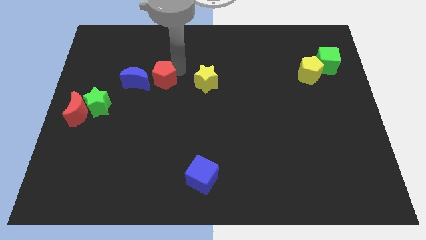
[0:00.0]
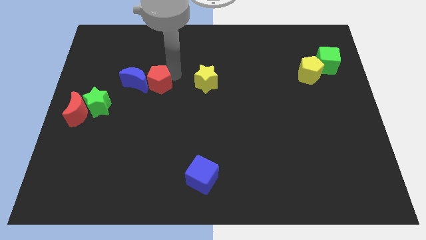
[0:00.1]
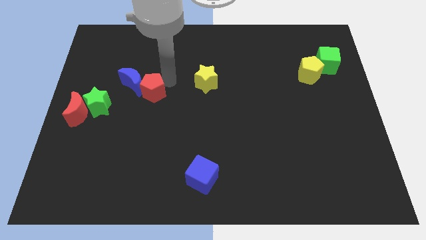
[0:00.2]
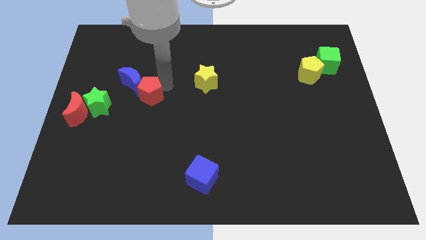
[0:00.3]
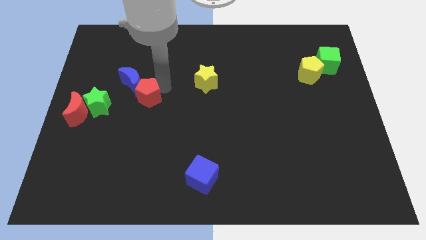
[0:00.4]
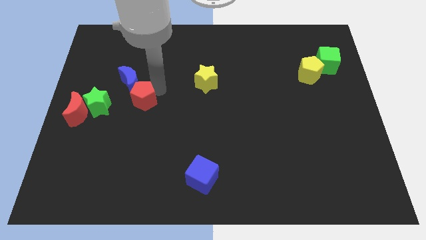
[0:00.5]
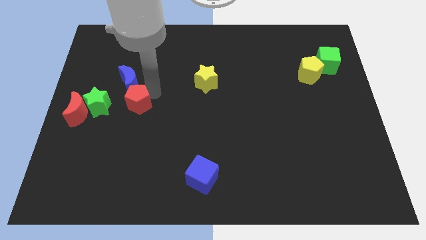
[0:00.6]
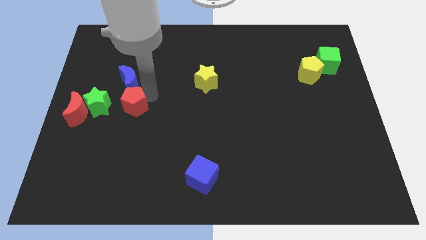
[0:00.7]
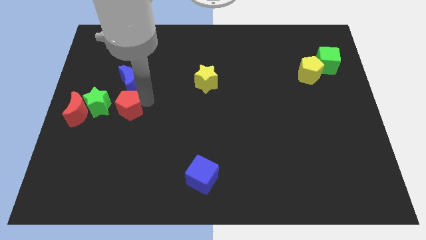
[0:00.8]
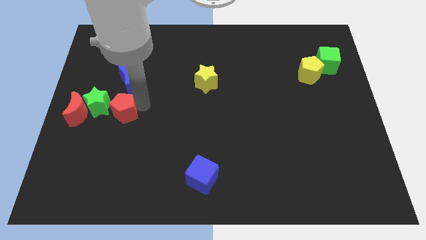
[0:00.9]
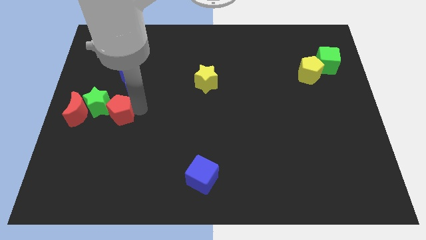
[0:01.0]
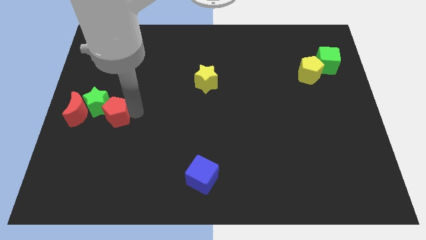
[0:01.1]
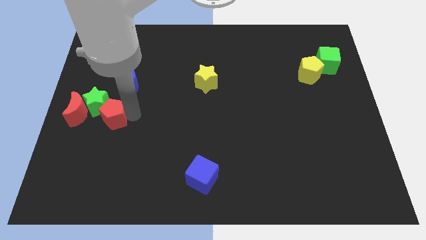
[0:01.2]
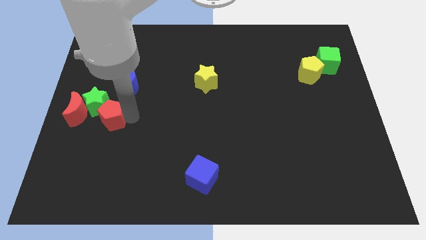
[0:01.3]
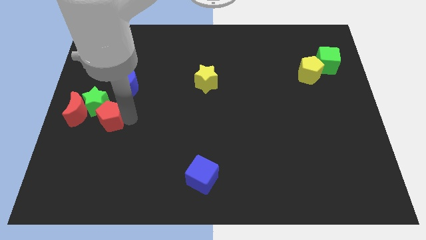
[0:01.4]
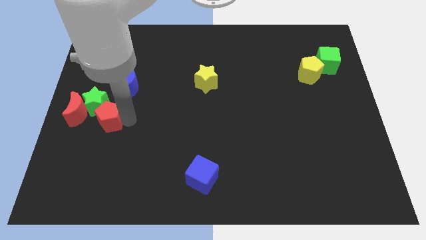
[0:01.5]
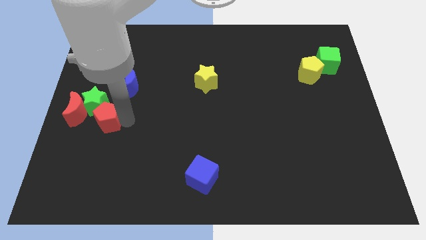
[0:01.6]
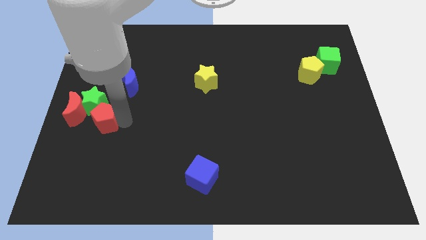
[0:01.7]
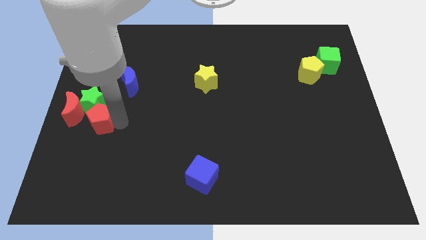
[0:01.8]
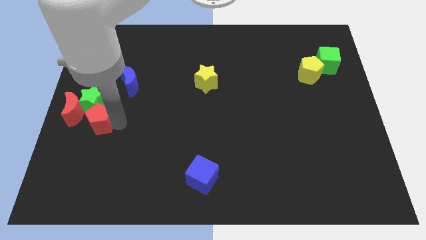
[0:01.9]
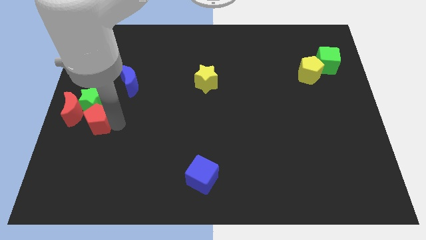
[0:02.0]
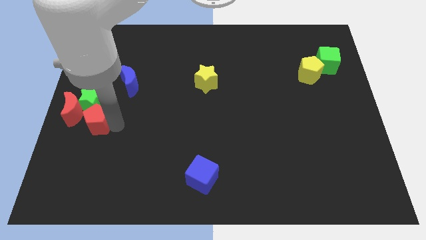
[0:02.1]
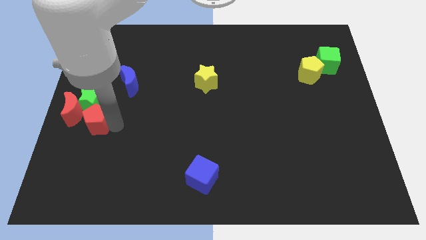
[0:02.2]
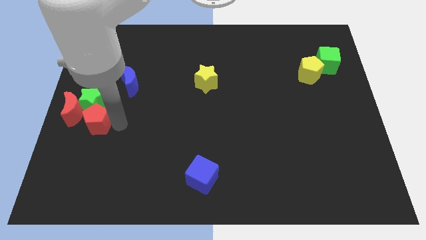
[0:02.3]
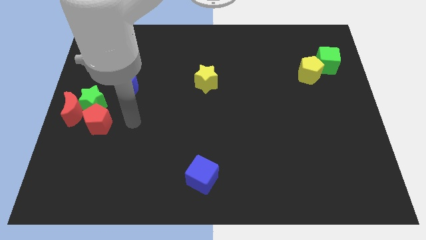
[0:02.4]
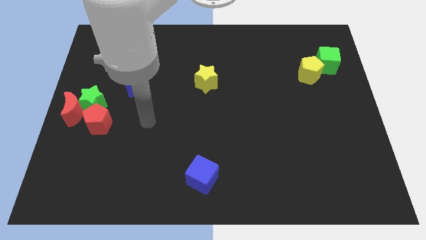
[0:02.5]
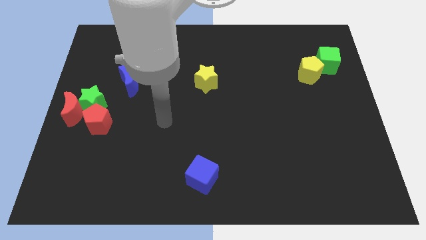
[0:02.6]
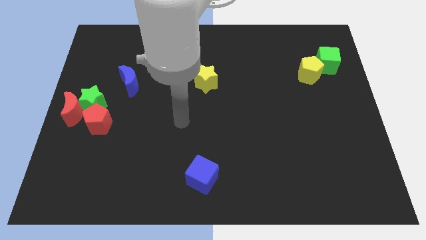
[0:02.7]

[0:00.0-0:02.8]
push the red pentagon into the green star

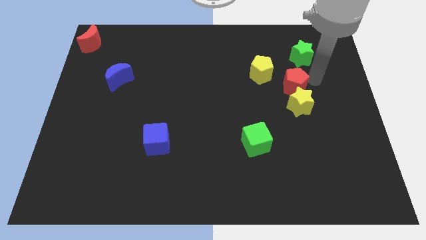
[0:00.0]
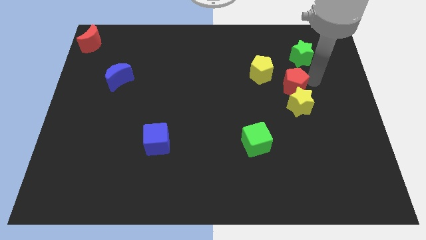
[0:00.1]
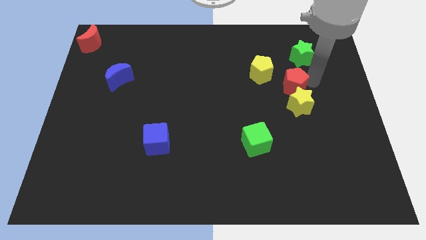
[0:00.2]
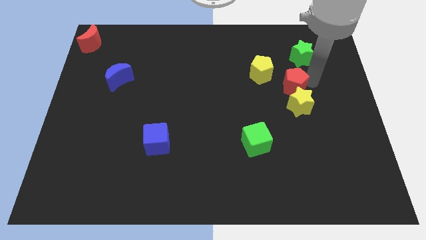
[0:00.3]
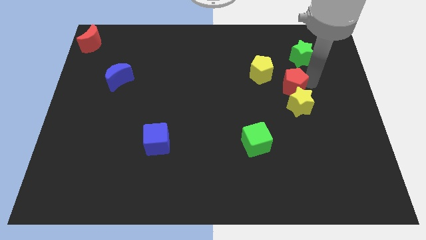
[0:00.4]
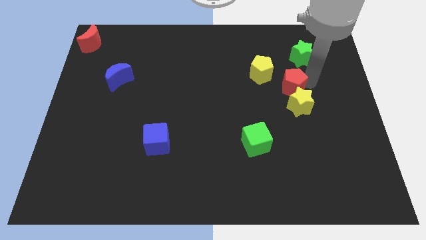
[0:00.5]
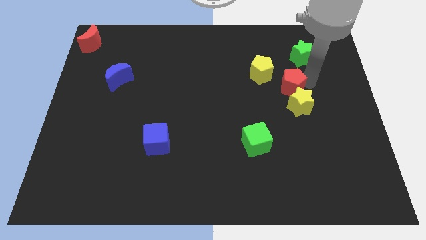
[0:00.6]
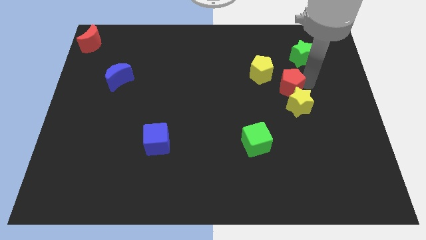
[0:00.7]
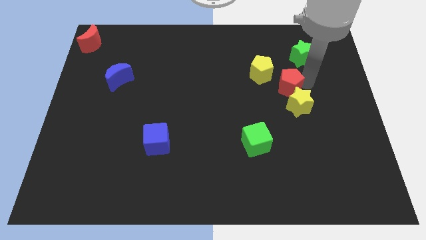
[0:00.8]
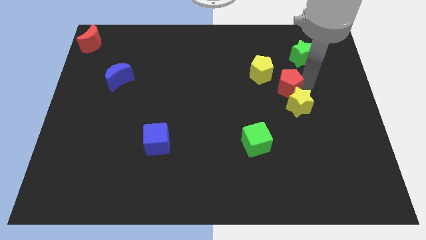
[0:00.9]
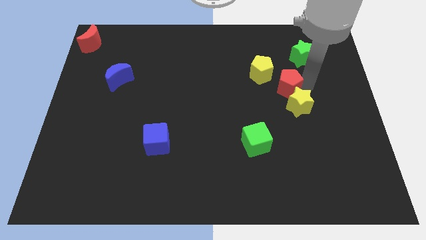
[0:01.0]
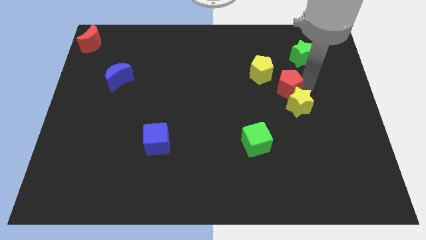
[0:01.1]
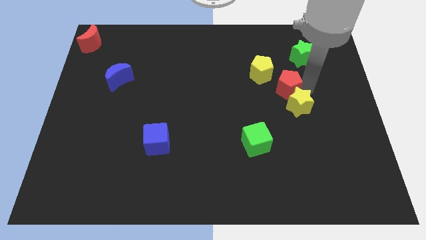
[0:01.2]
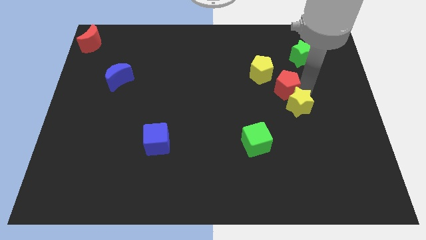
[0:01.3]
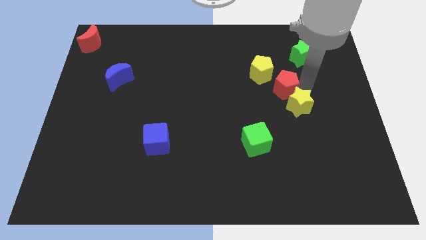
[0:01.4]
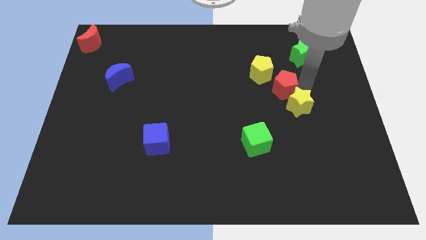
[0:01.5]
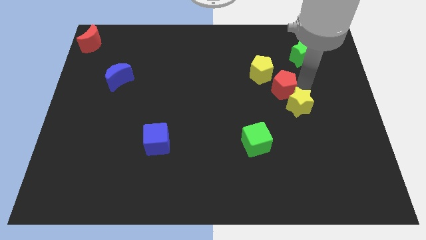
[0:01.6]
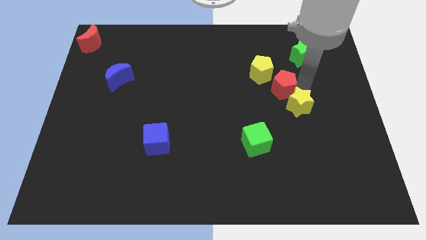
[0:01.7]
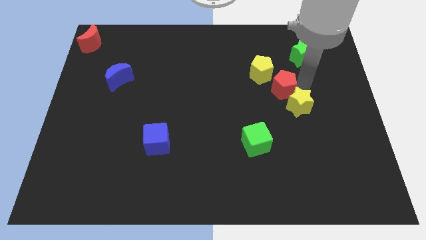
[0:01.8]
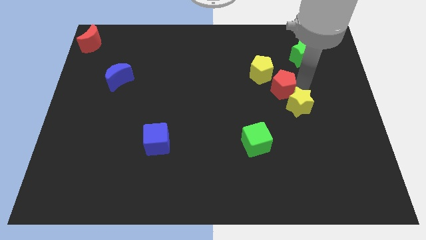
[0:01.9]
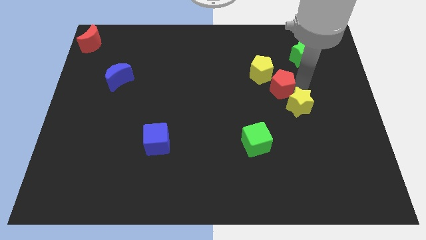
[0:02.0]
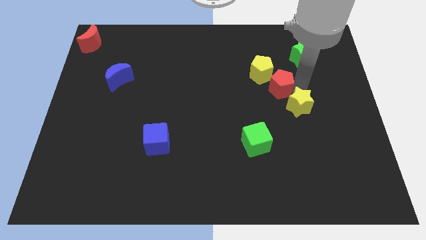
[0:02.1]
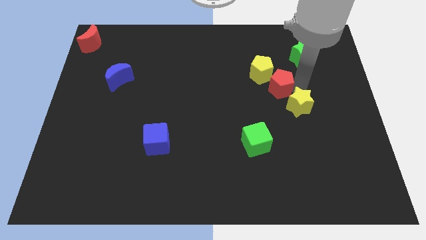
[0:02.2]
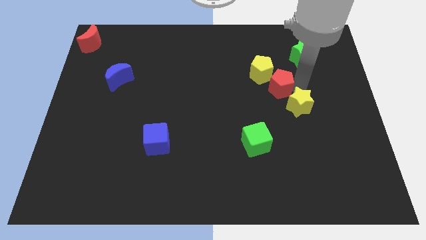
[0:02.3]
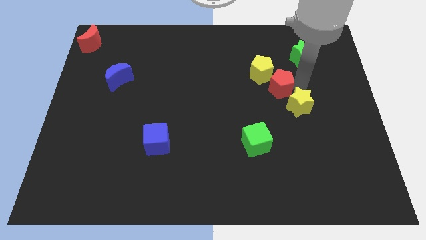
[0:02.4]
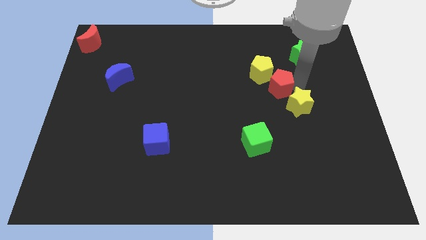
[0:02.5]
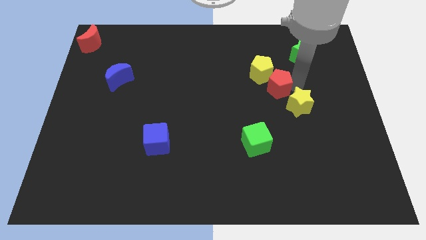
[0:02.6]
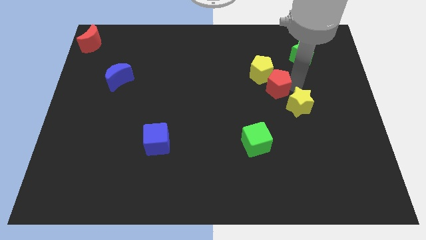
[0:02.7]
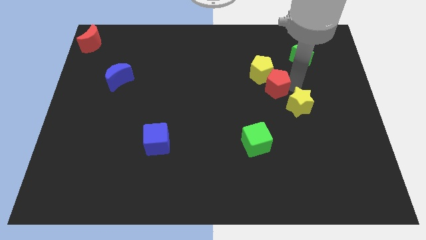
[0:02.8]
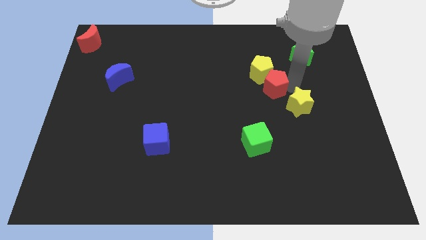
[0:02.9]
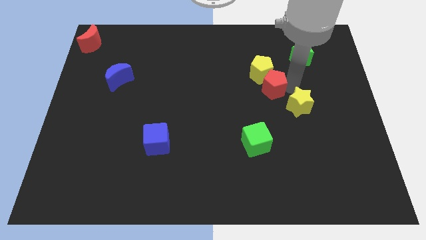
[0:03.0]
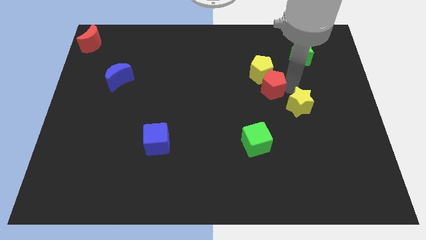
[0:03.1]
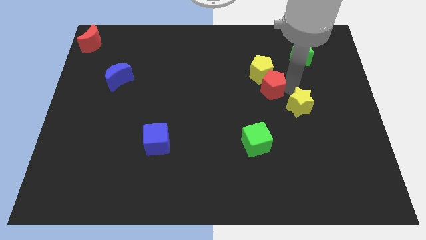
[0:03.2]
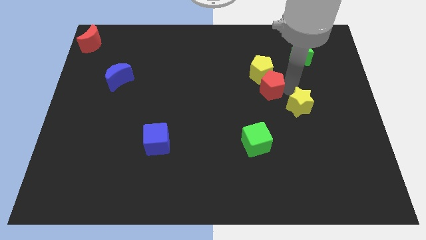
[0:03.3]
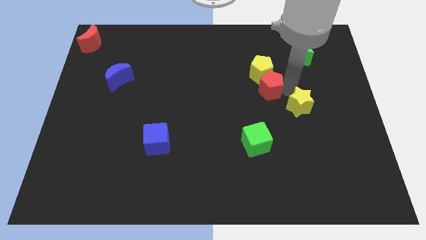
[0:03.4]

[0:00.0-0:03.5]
make the red pentagon to touch the yellow pentagon

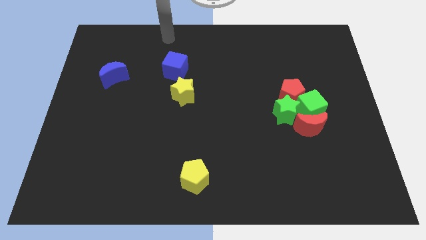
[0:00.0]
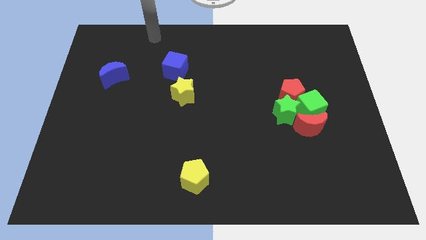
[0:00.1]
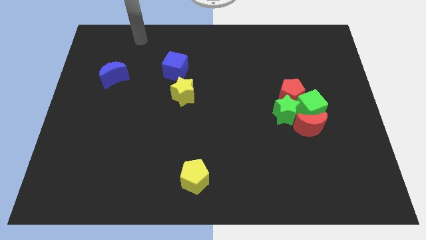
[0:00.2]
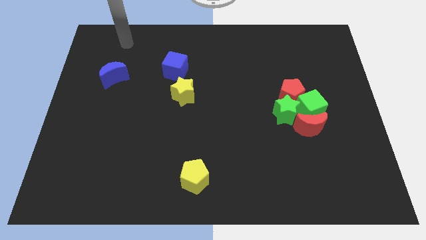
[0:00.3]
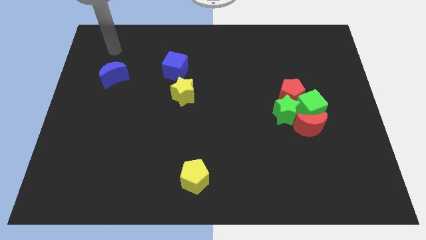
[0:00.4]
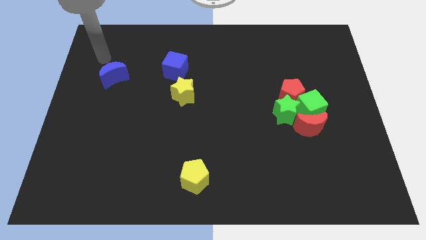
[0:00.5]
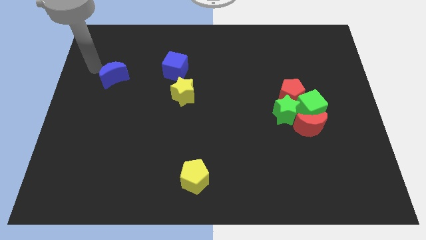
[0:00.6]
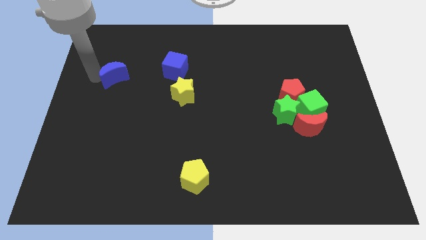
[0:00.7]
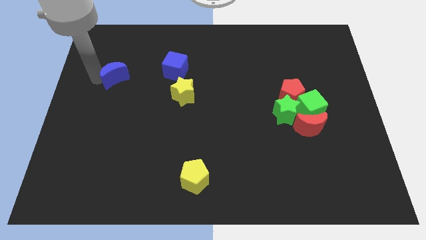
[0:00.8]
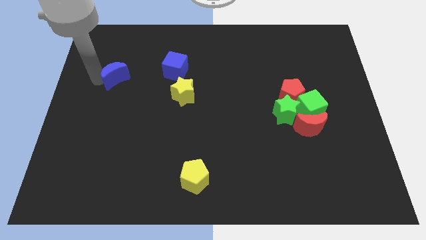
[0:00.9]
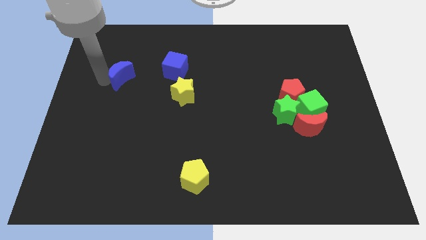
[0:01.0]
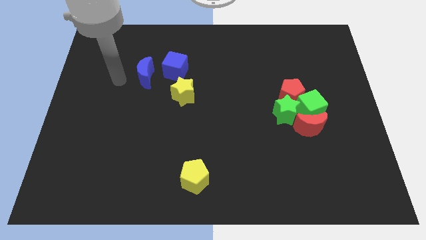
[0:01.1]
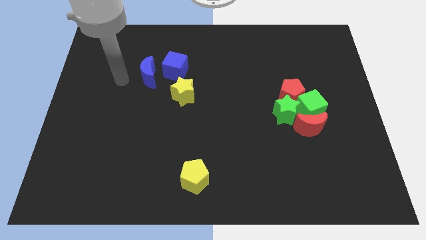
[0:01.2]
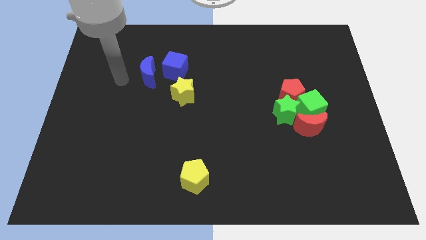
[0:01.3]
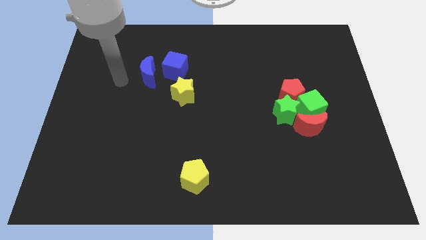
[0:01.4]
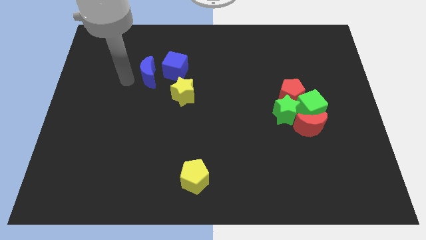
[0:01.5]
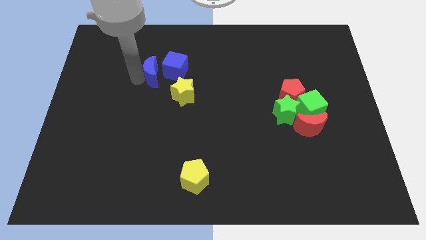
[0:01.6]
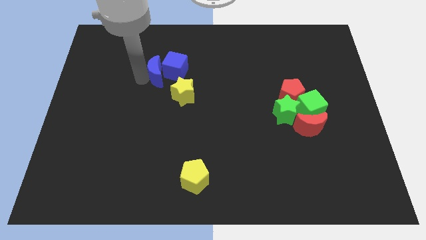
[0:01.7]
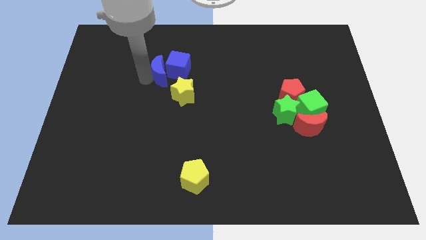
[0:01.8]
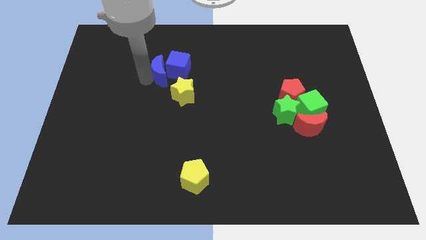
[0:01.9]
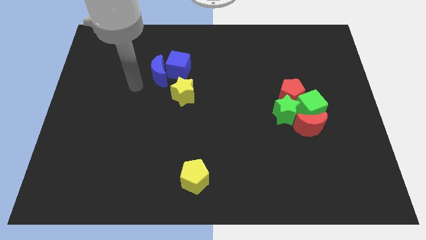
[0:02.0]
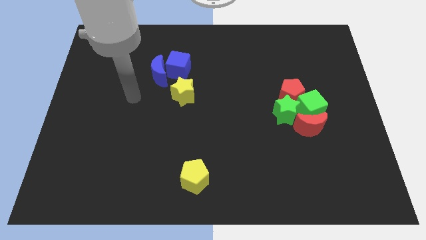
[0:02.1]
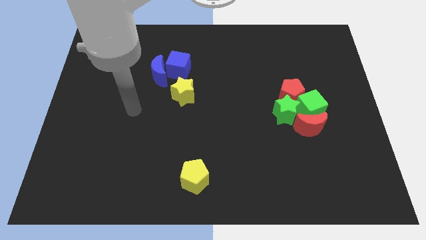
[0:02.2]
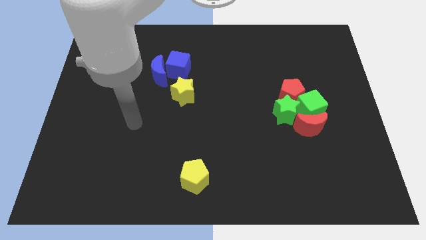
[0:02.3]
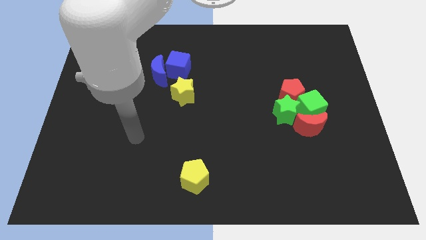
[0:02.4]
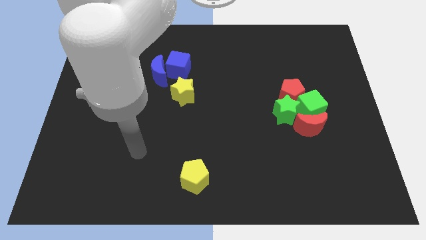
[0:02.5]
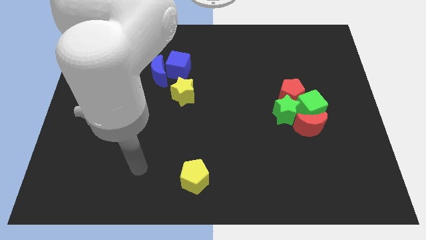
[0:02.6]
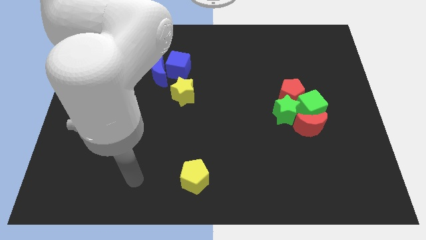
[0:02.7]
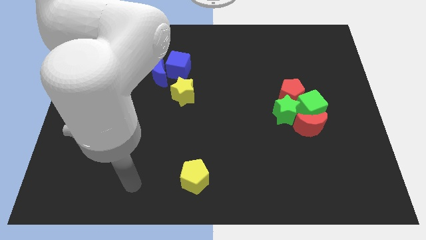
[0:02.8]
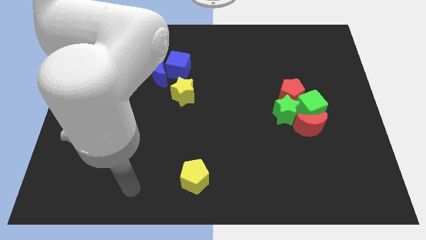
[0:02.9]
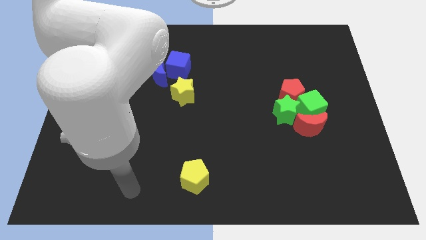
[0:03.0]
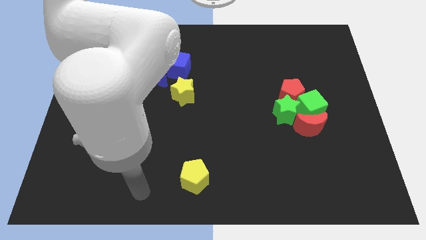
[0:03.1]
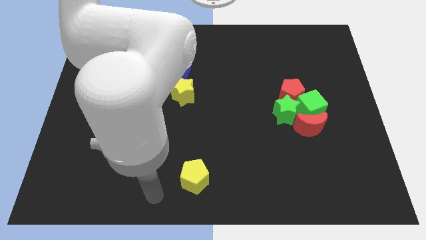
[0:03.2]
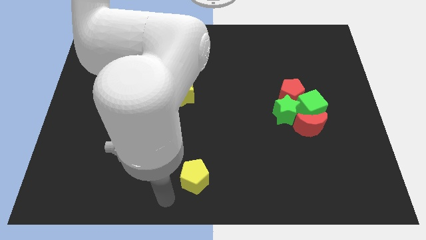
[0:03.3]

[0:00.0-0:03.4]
move the blue moon into the blue cube
